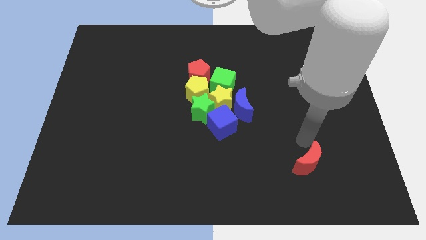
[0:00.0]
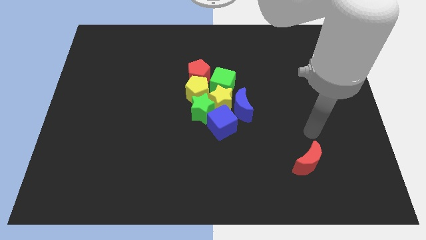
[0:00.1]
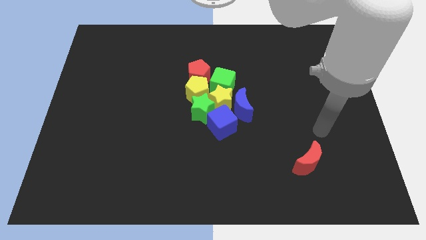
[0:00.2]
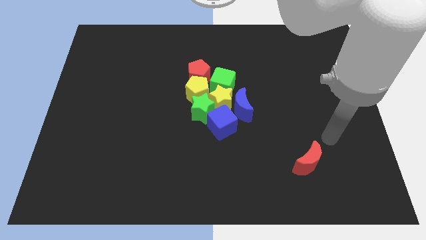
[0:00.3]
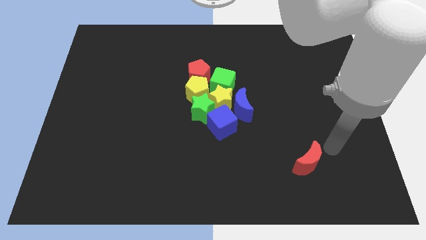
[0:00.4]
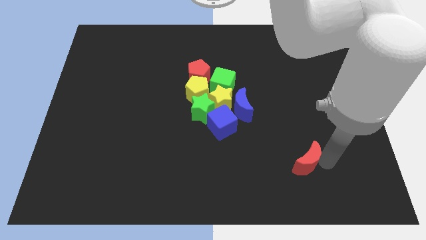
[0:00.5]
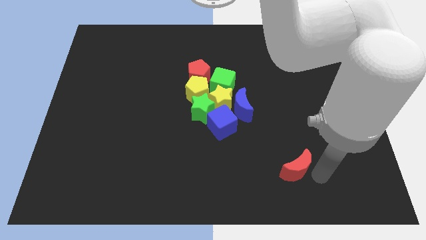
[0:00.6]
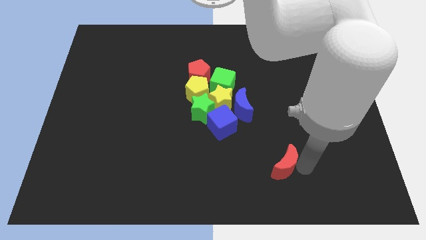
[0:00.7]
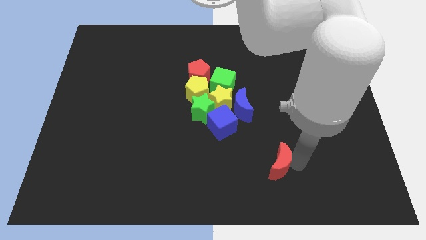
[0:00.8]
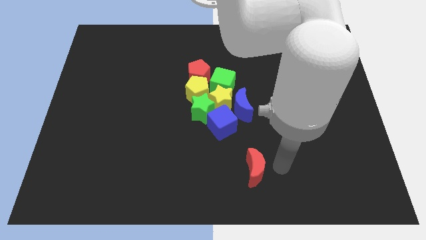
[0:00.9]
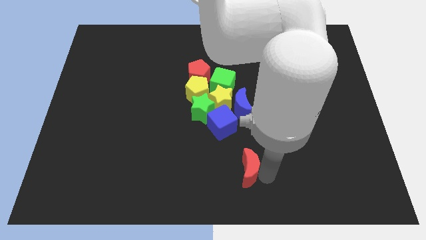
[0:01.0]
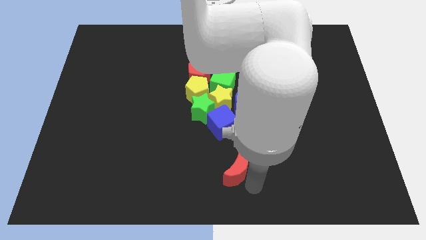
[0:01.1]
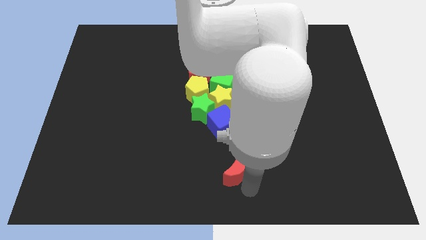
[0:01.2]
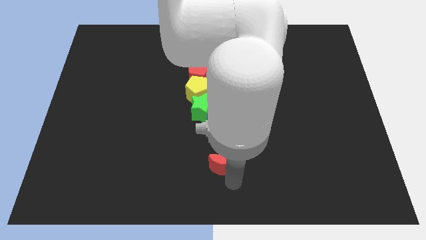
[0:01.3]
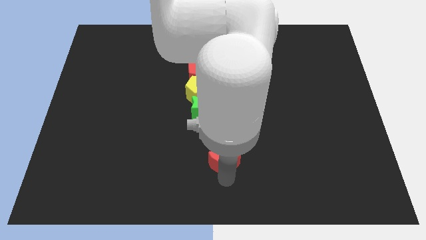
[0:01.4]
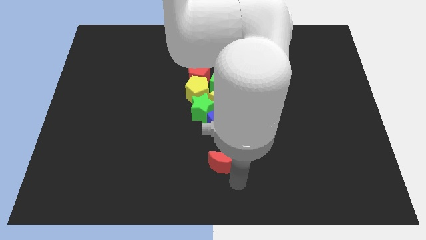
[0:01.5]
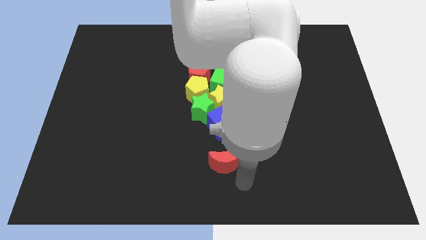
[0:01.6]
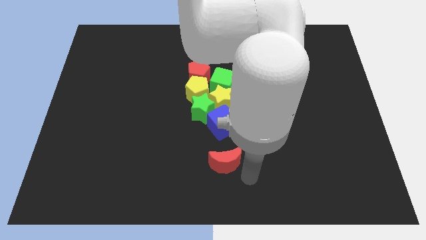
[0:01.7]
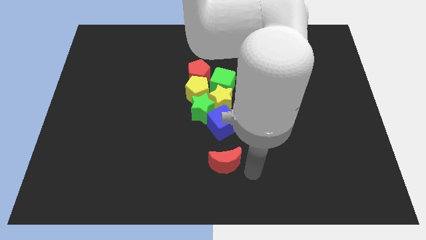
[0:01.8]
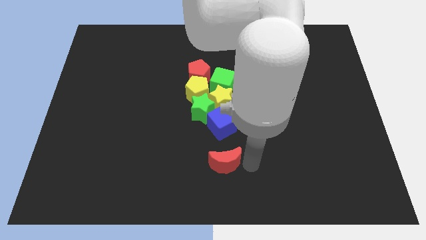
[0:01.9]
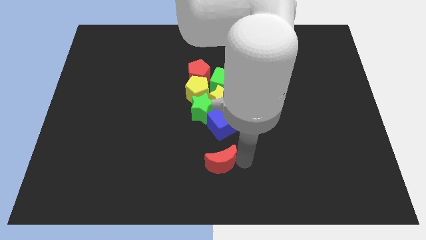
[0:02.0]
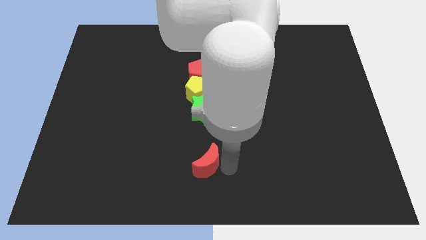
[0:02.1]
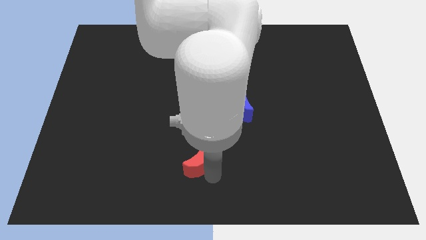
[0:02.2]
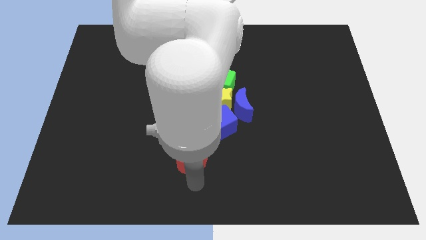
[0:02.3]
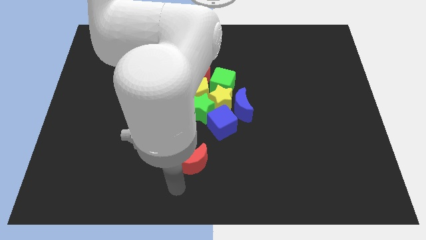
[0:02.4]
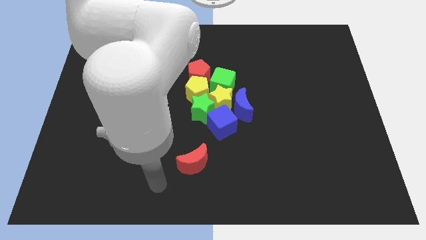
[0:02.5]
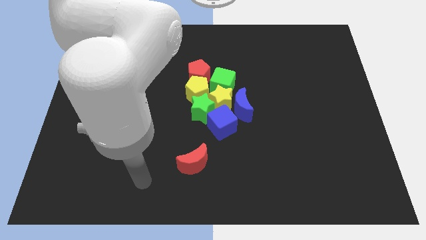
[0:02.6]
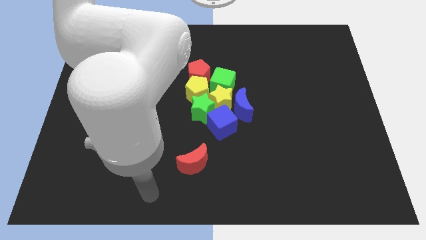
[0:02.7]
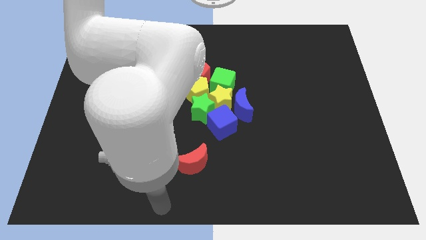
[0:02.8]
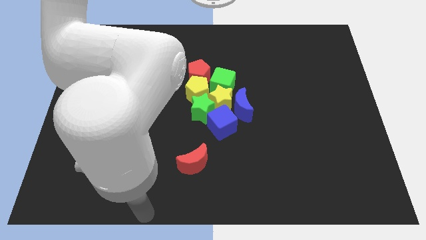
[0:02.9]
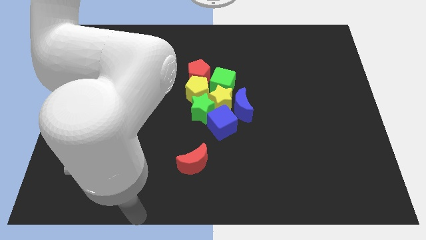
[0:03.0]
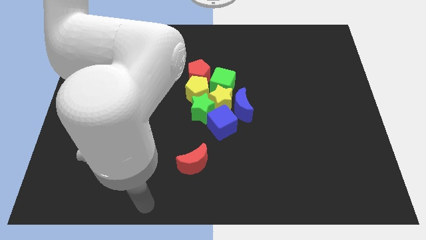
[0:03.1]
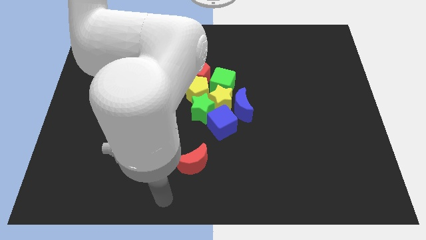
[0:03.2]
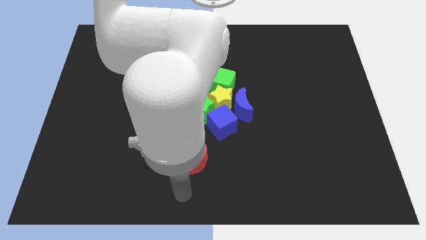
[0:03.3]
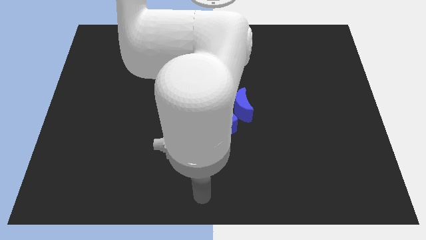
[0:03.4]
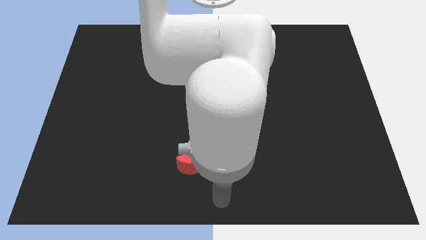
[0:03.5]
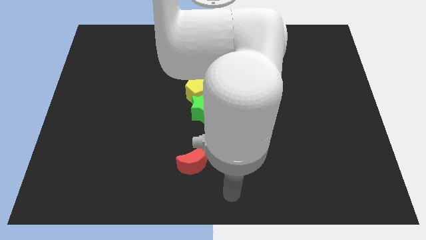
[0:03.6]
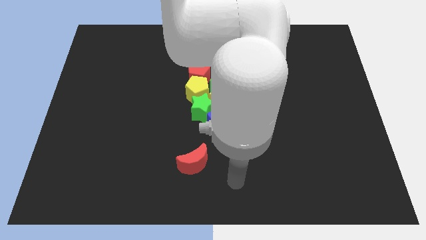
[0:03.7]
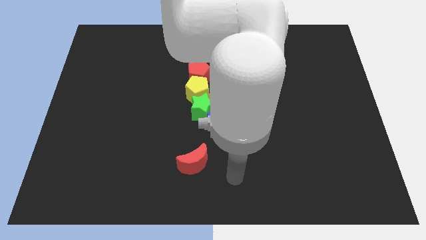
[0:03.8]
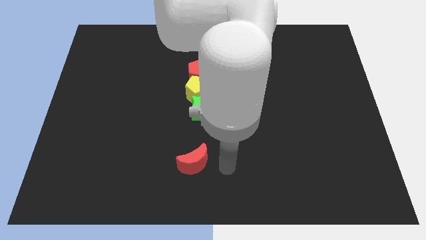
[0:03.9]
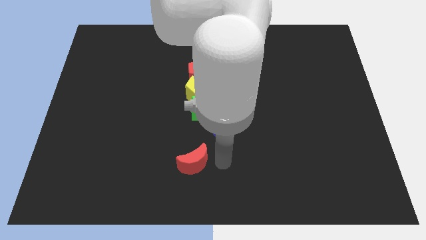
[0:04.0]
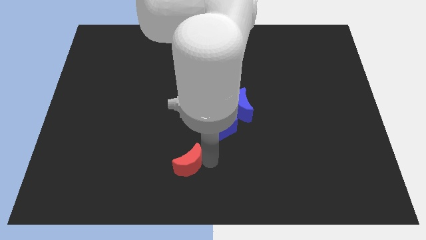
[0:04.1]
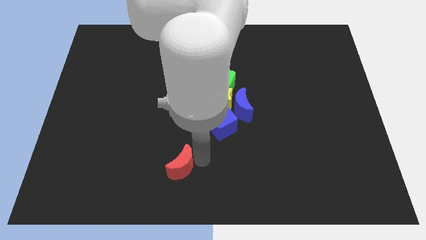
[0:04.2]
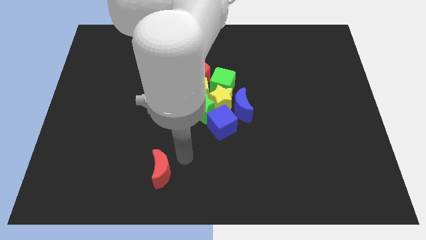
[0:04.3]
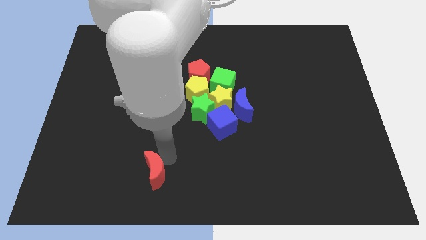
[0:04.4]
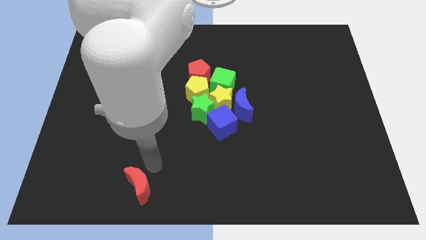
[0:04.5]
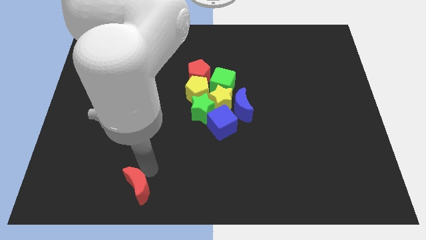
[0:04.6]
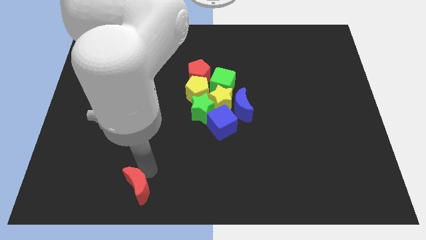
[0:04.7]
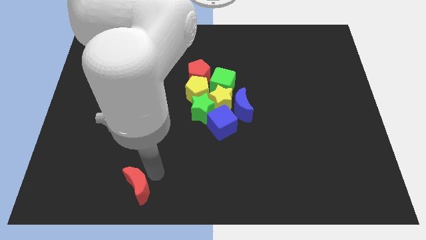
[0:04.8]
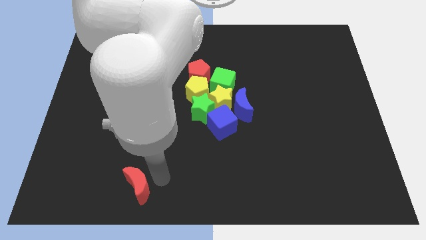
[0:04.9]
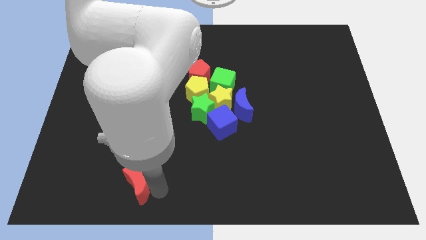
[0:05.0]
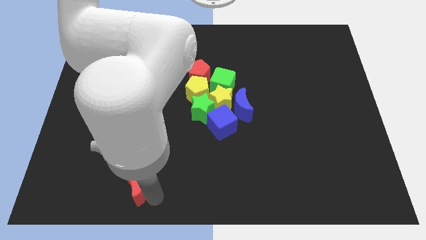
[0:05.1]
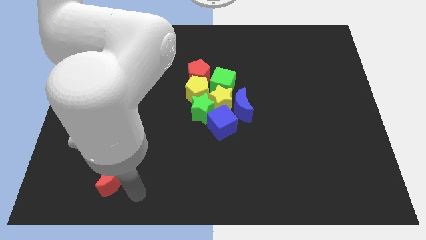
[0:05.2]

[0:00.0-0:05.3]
drag the red crescent towards bottom left side

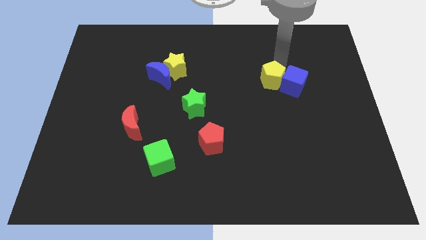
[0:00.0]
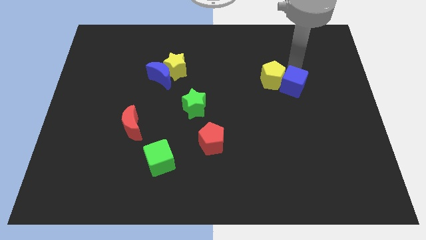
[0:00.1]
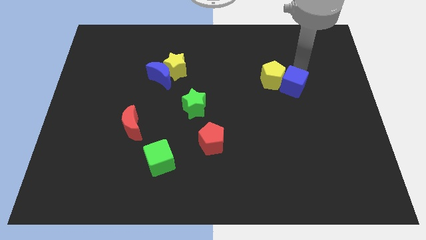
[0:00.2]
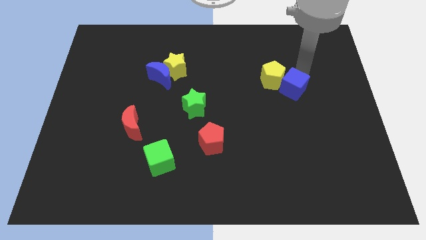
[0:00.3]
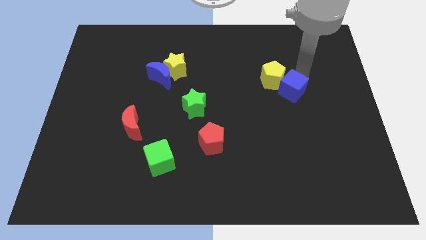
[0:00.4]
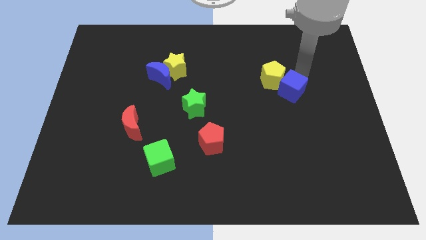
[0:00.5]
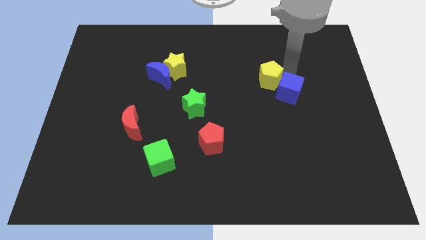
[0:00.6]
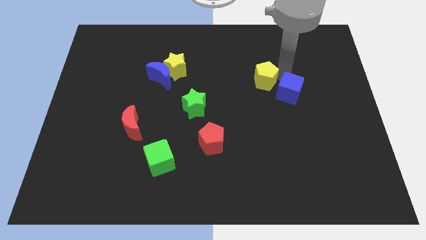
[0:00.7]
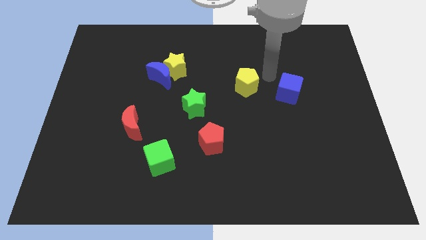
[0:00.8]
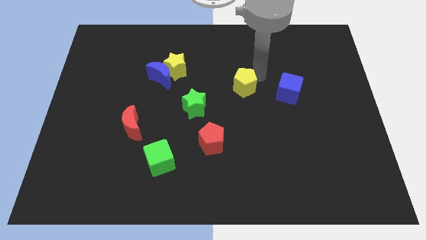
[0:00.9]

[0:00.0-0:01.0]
separate the yellow pentagon from the blue cube

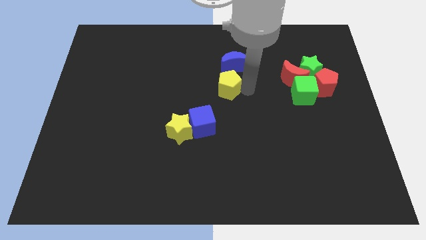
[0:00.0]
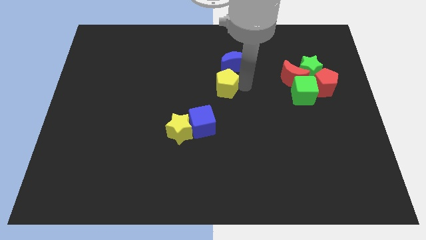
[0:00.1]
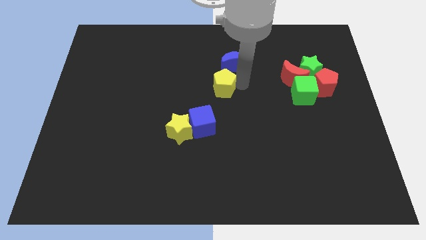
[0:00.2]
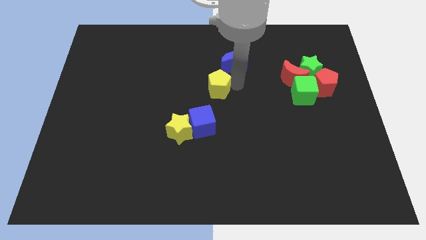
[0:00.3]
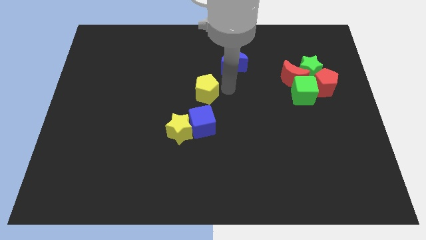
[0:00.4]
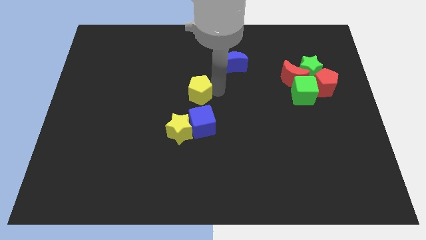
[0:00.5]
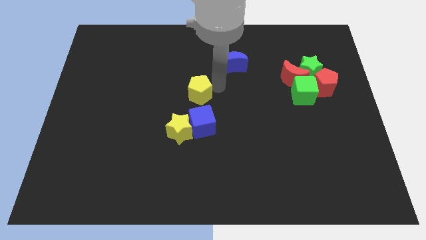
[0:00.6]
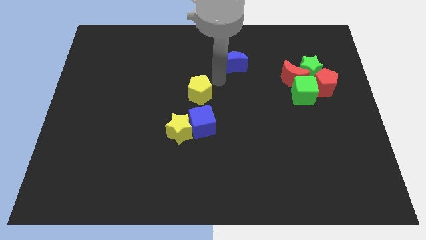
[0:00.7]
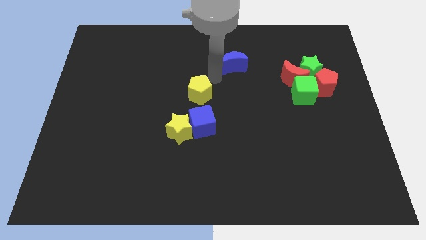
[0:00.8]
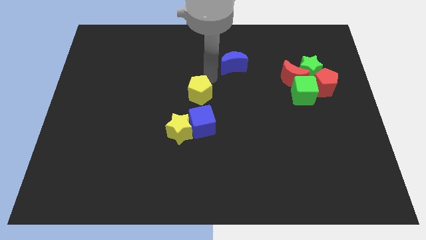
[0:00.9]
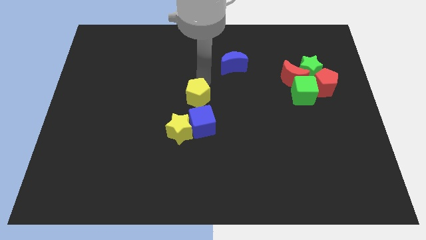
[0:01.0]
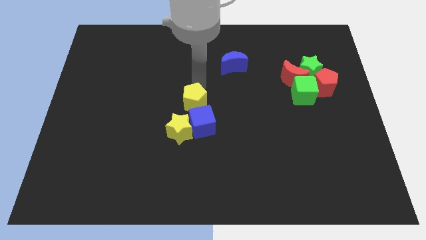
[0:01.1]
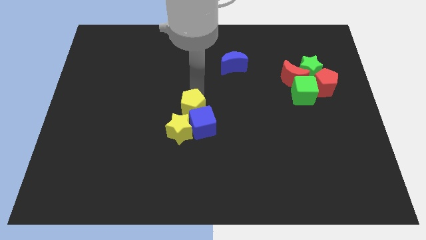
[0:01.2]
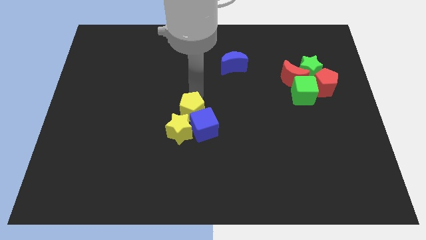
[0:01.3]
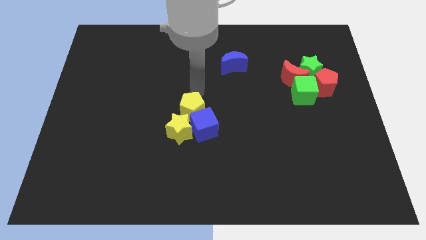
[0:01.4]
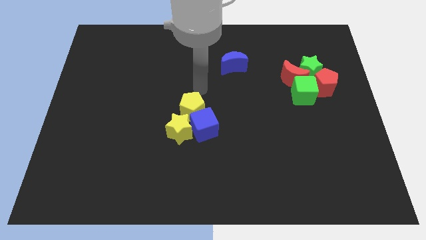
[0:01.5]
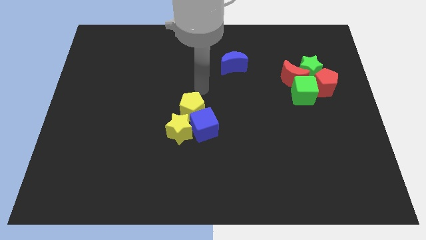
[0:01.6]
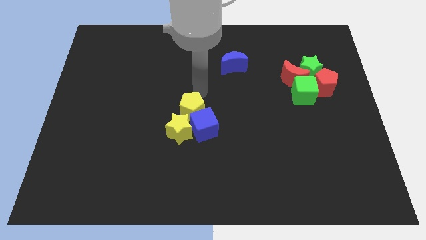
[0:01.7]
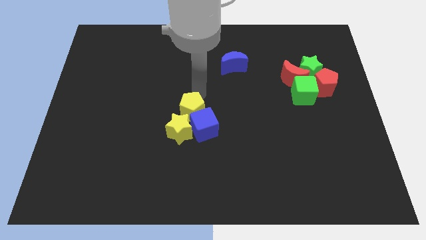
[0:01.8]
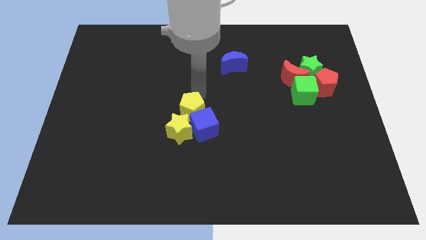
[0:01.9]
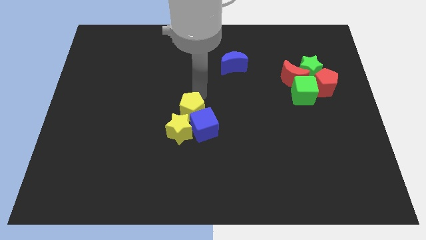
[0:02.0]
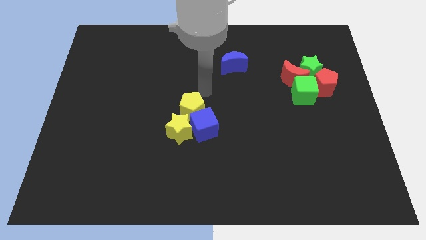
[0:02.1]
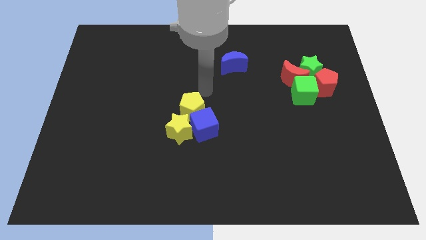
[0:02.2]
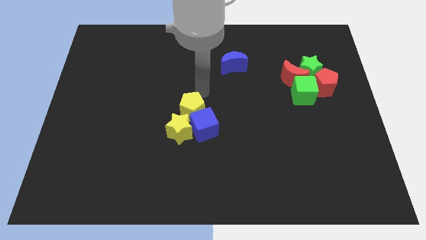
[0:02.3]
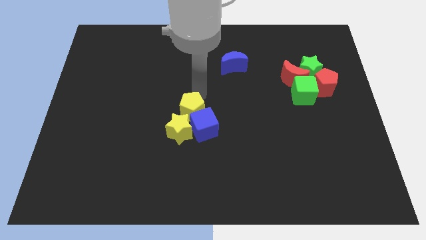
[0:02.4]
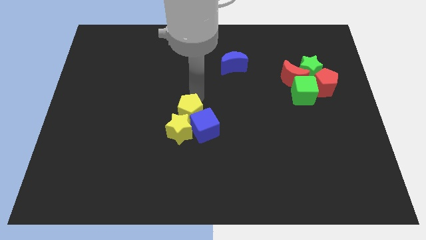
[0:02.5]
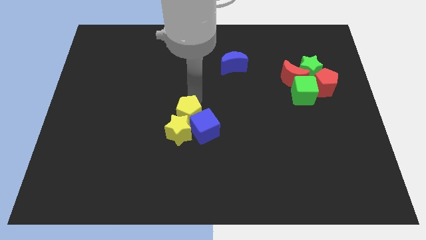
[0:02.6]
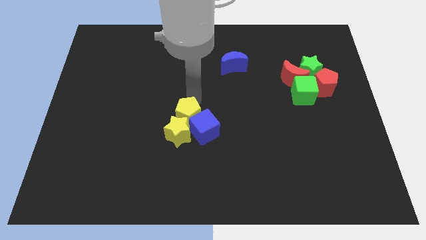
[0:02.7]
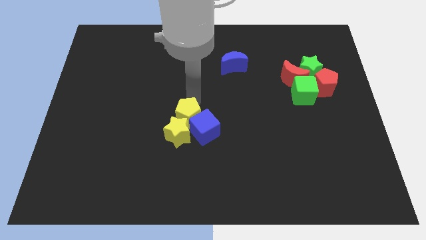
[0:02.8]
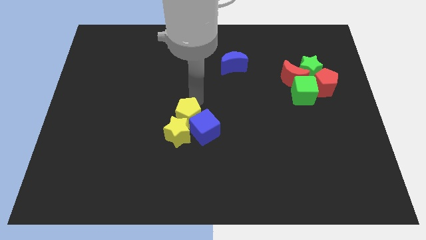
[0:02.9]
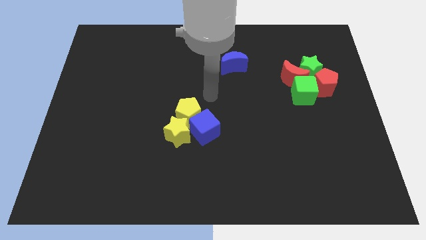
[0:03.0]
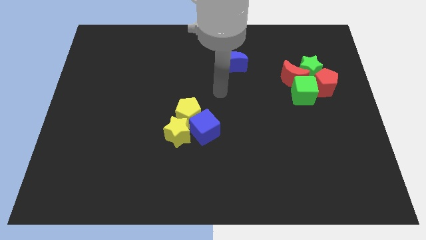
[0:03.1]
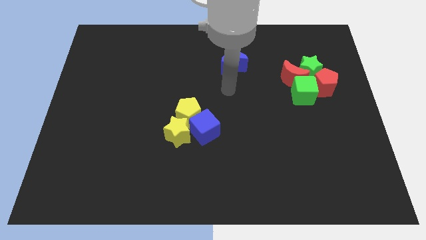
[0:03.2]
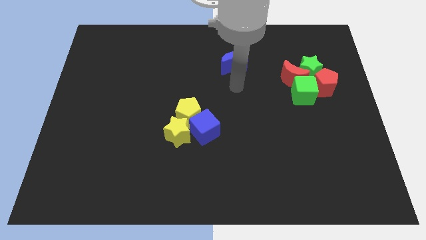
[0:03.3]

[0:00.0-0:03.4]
move the yellow pentagon towards the top left side of the blue block
